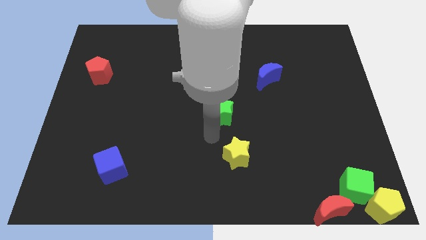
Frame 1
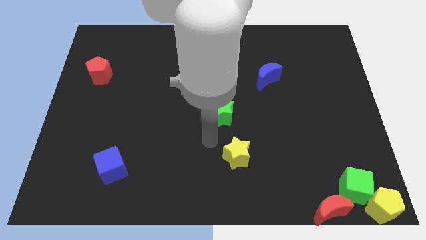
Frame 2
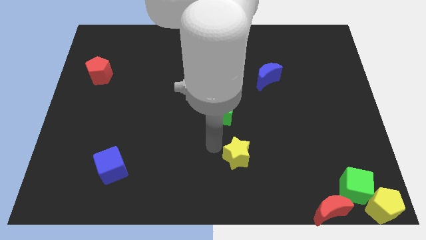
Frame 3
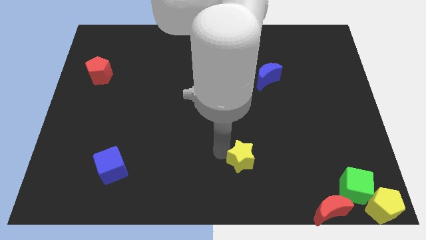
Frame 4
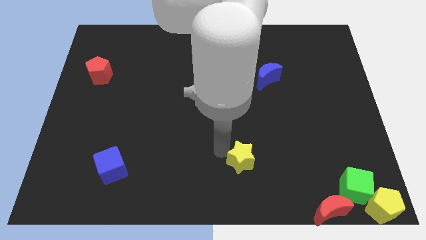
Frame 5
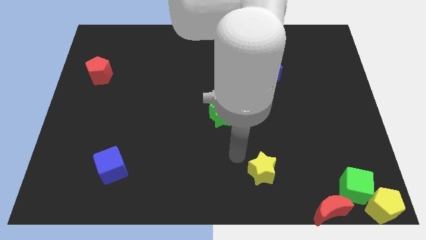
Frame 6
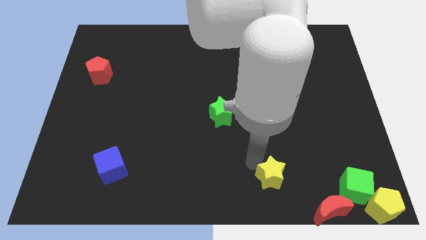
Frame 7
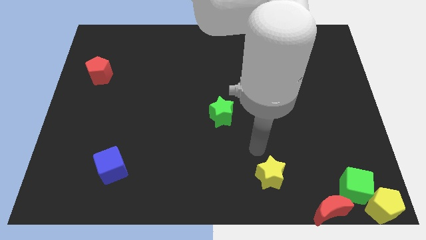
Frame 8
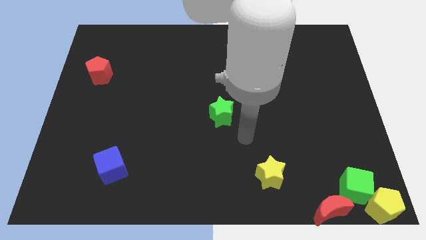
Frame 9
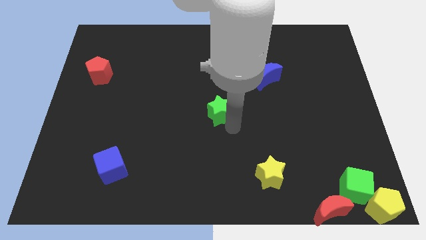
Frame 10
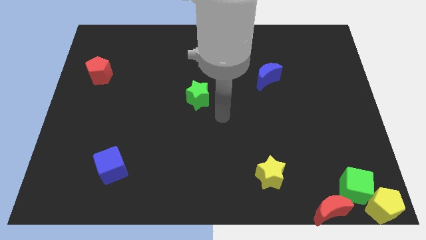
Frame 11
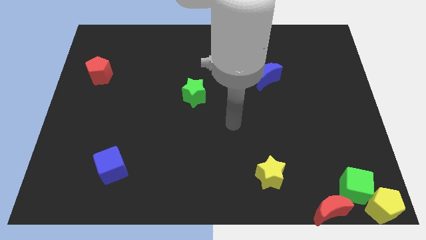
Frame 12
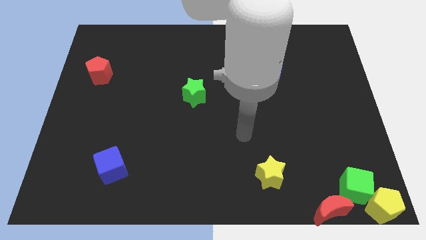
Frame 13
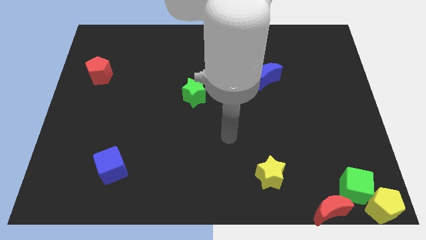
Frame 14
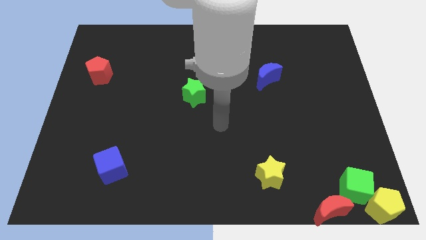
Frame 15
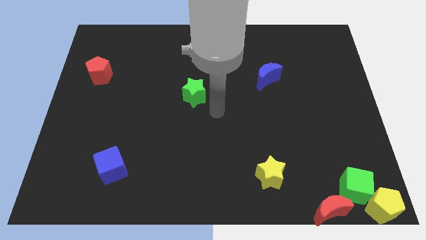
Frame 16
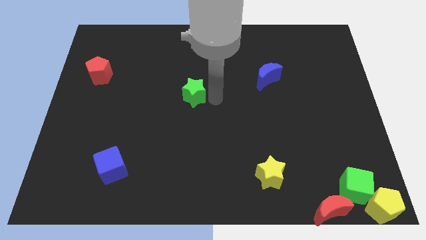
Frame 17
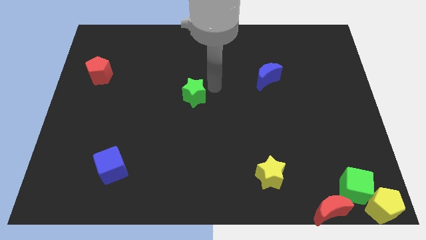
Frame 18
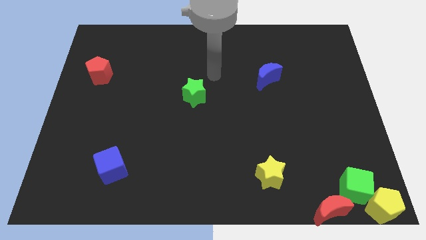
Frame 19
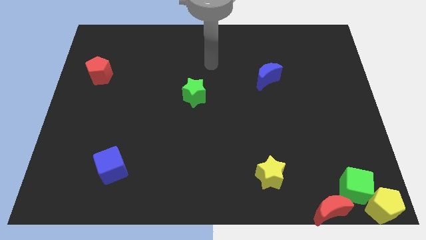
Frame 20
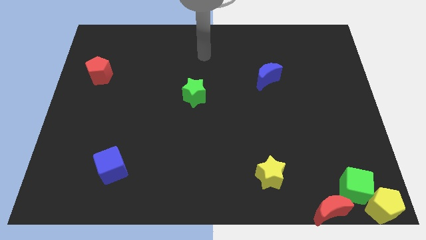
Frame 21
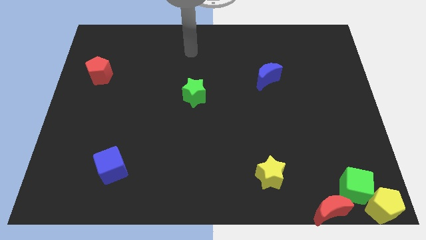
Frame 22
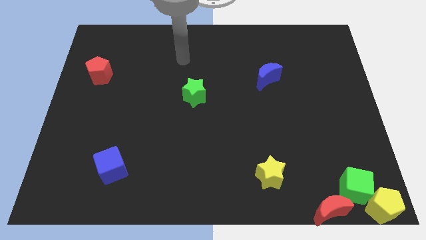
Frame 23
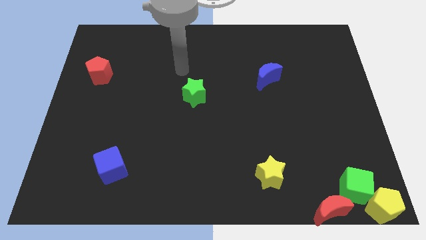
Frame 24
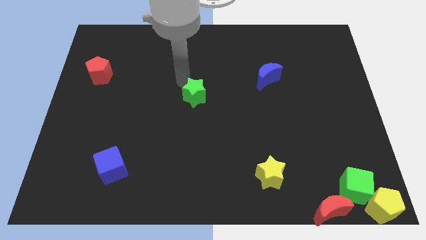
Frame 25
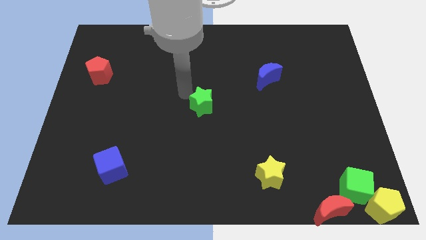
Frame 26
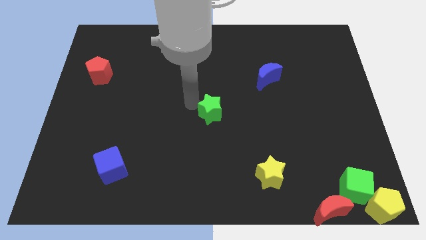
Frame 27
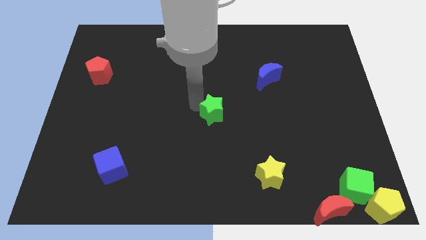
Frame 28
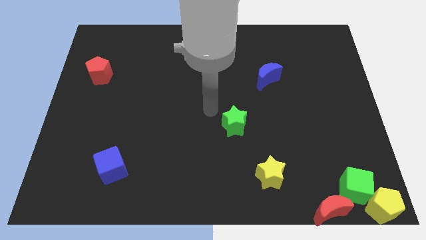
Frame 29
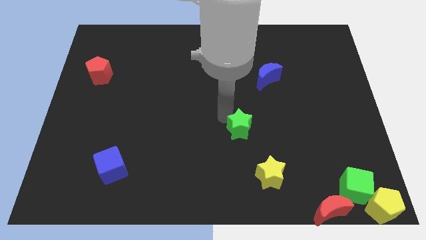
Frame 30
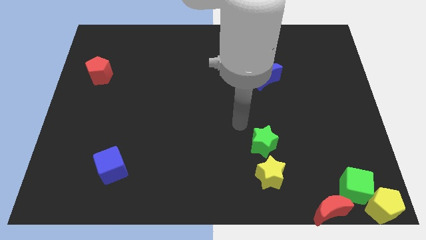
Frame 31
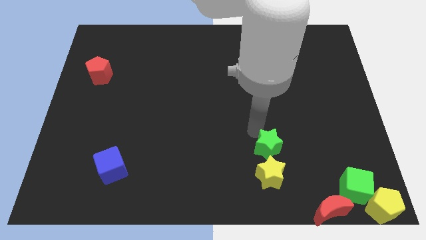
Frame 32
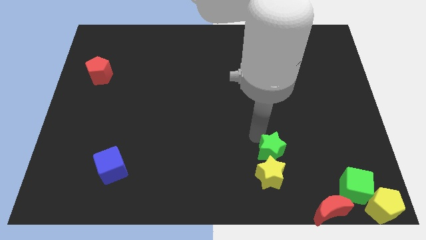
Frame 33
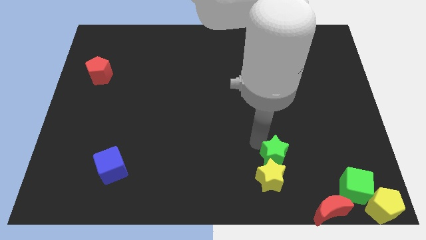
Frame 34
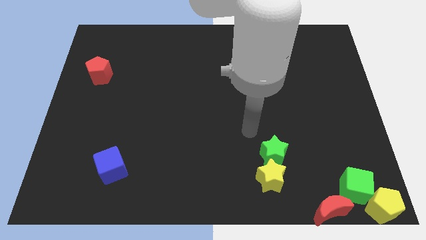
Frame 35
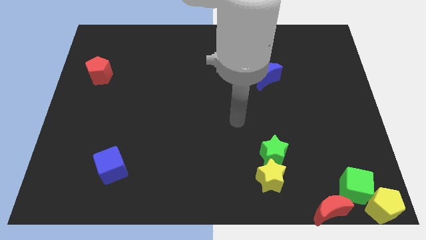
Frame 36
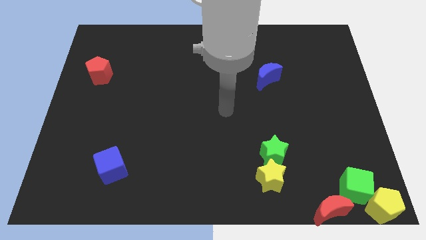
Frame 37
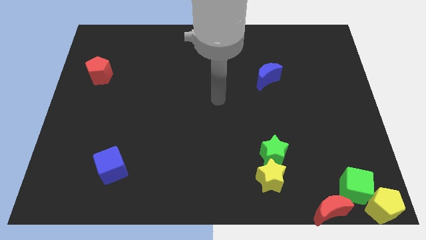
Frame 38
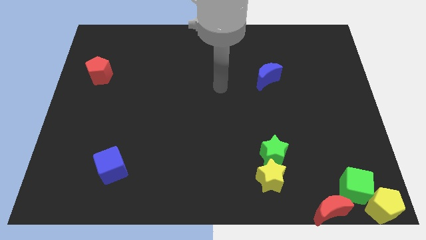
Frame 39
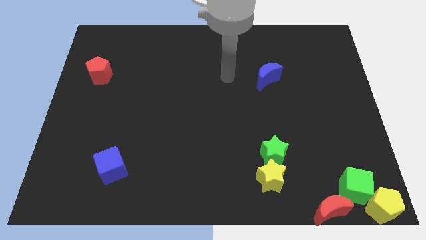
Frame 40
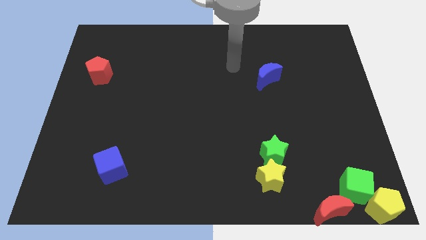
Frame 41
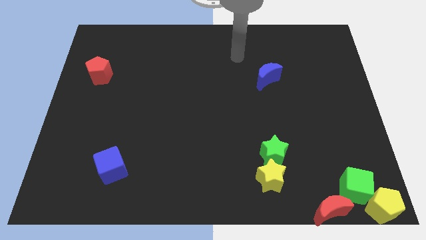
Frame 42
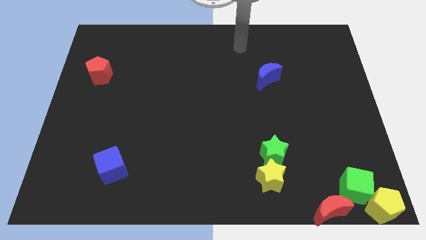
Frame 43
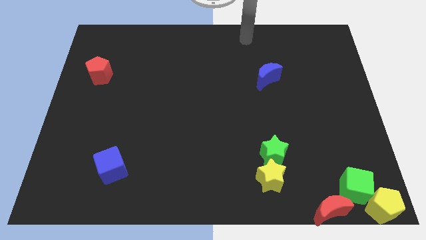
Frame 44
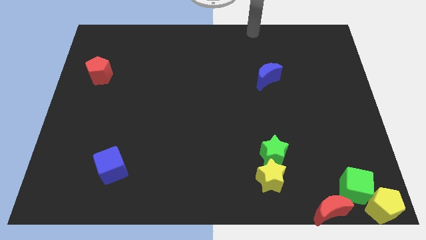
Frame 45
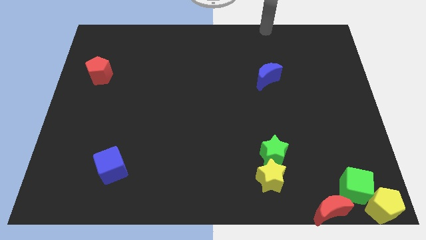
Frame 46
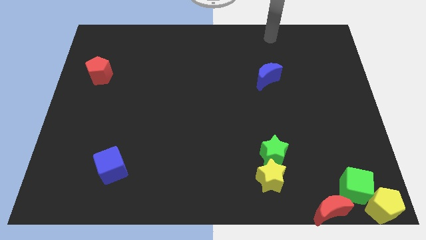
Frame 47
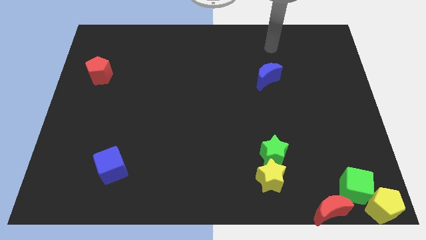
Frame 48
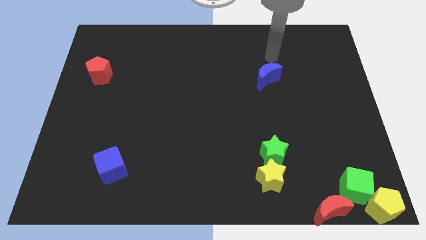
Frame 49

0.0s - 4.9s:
place the green star in between yellow star and blue crescent

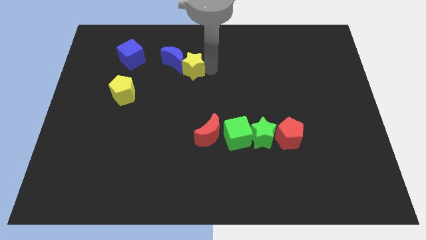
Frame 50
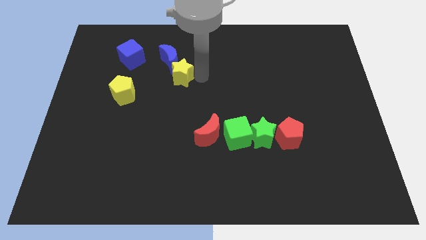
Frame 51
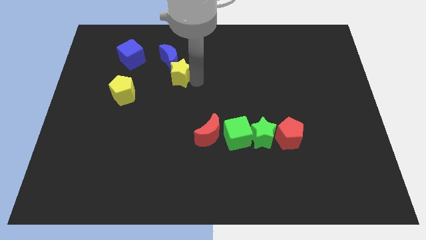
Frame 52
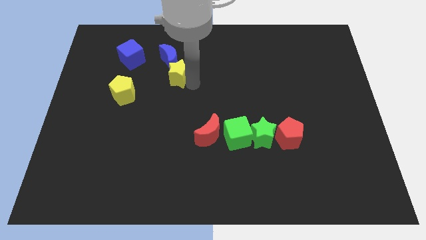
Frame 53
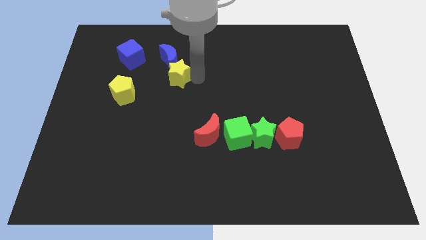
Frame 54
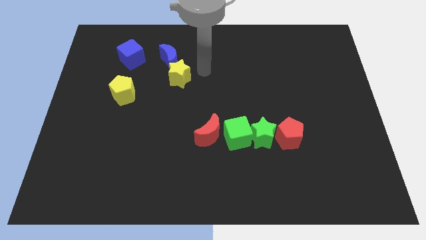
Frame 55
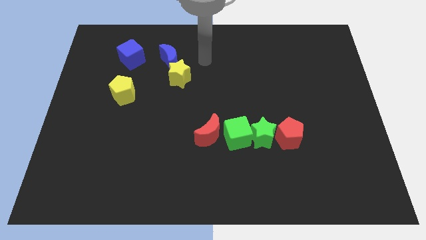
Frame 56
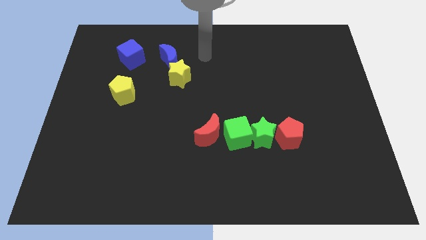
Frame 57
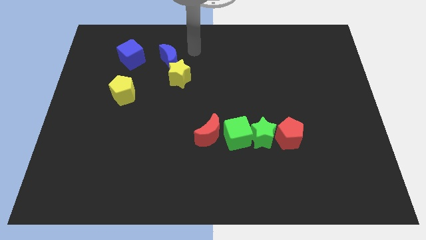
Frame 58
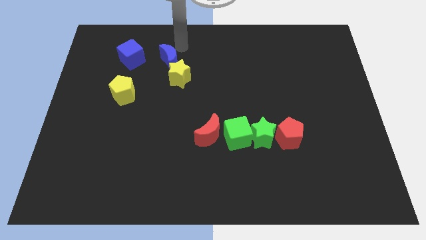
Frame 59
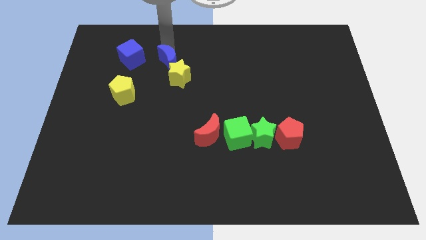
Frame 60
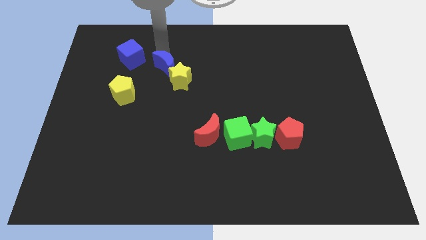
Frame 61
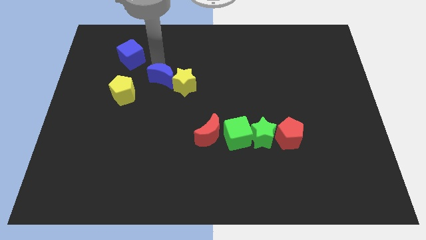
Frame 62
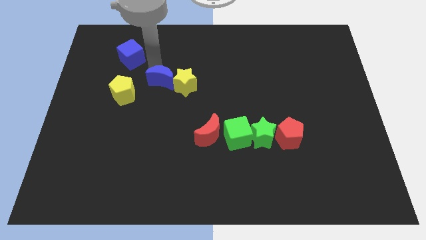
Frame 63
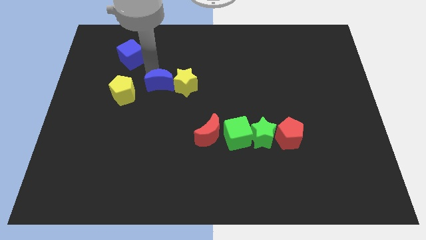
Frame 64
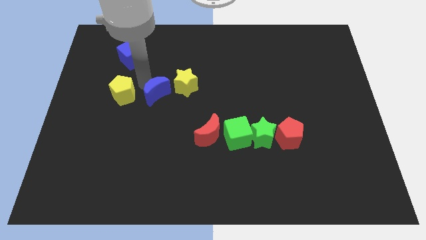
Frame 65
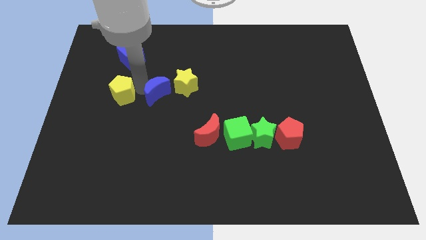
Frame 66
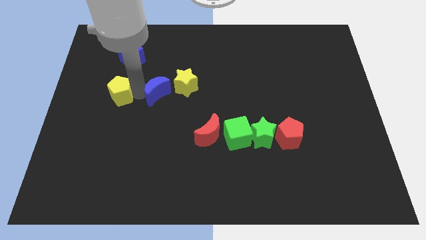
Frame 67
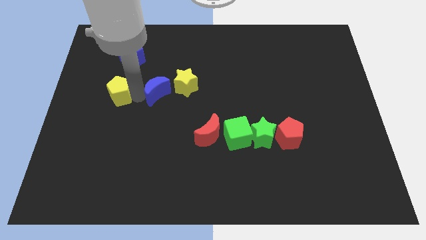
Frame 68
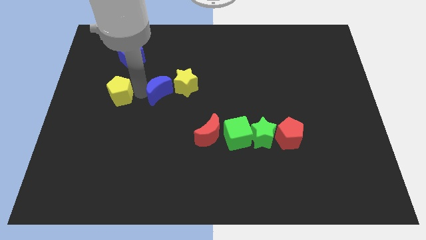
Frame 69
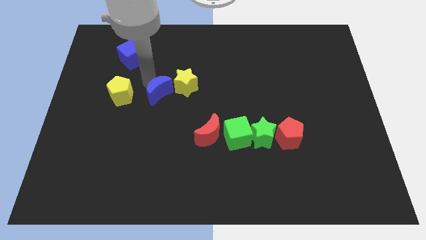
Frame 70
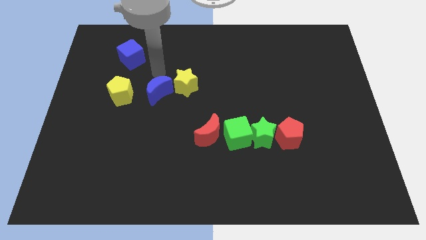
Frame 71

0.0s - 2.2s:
place the blue moon in between the yellow star and yellow pentagon

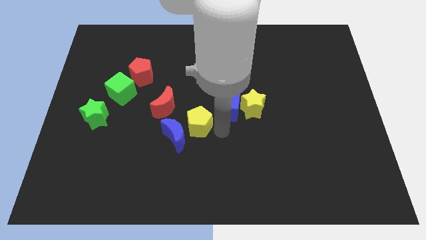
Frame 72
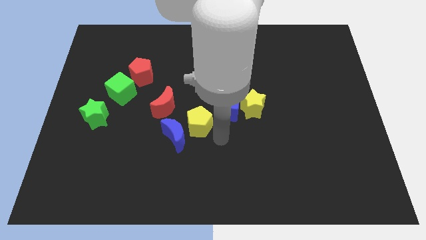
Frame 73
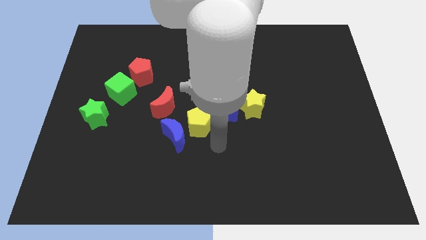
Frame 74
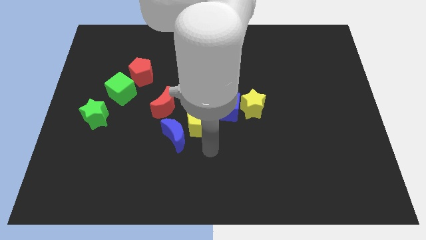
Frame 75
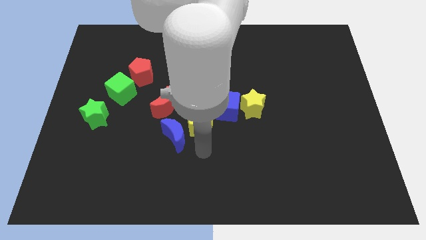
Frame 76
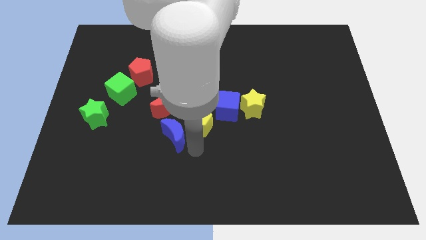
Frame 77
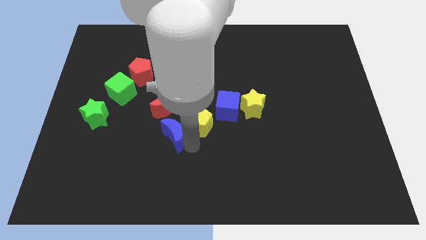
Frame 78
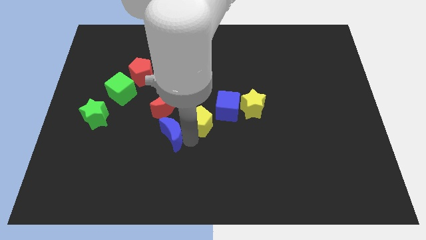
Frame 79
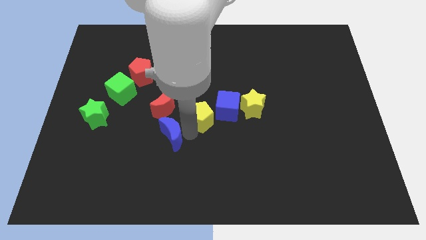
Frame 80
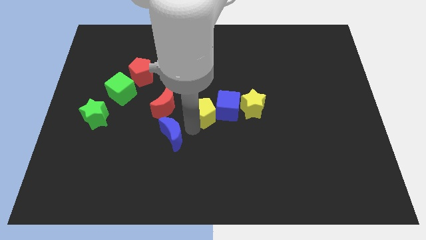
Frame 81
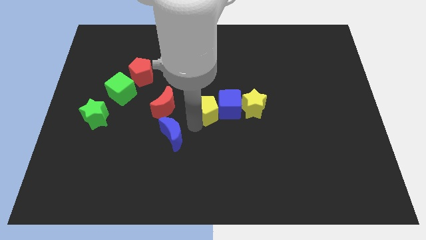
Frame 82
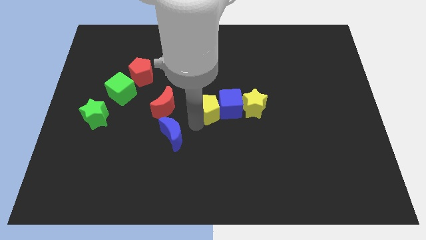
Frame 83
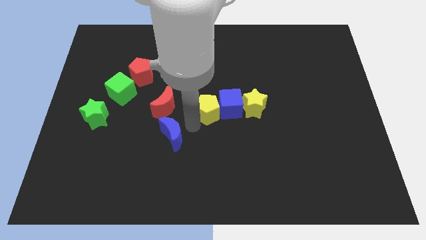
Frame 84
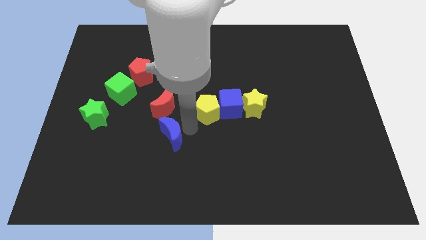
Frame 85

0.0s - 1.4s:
push the yellow pentagon into the blue cube

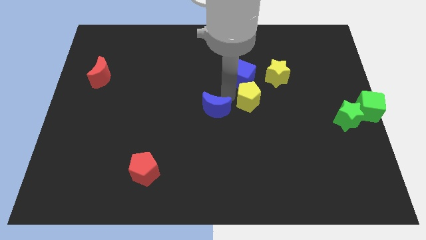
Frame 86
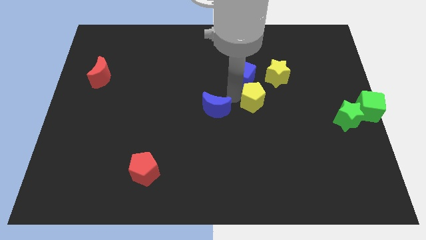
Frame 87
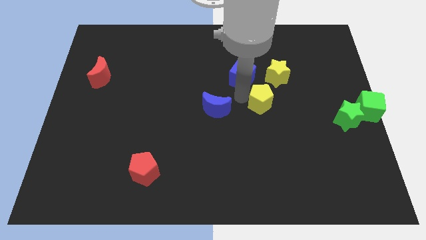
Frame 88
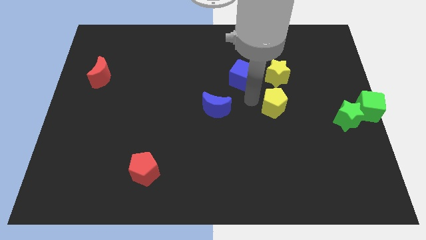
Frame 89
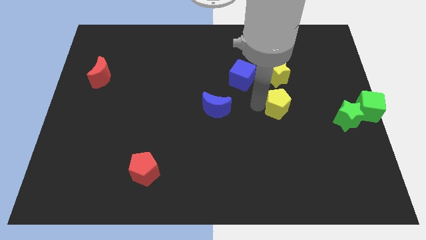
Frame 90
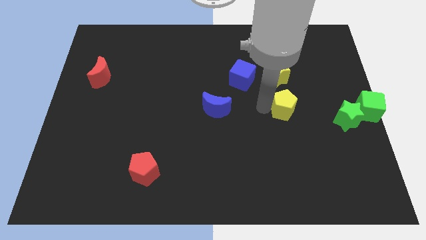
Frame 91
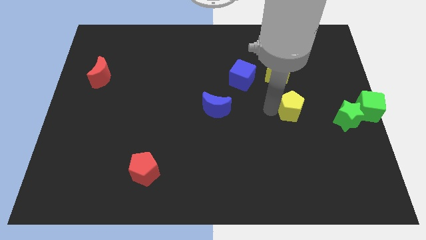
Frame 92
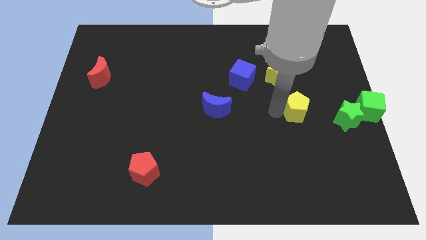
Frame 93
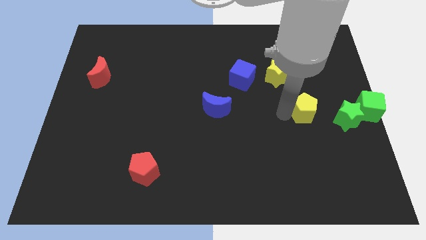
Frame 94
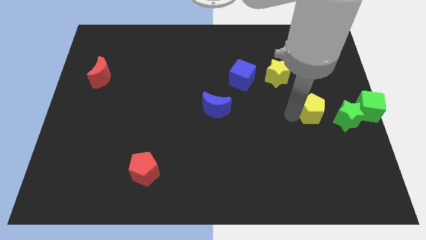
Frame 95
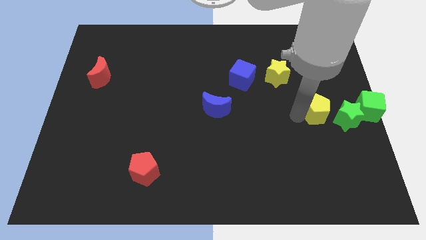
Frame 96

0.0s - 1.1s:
move the yellow pentagon to the left side of the green star
